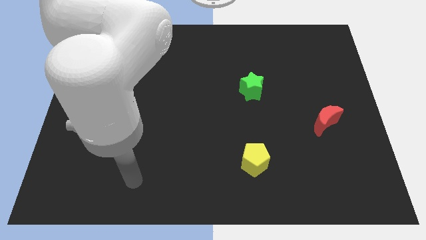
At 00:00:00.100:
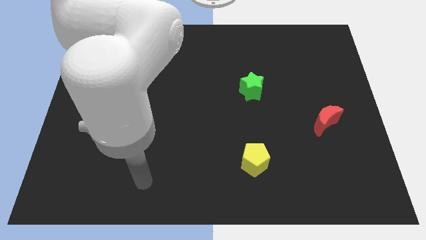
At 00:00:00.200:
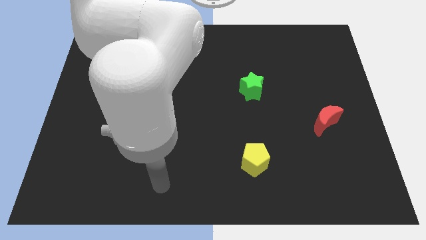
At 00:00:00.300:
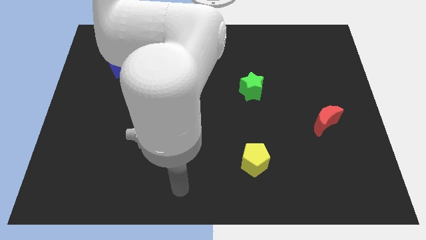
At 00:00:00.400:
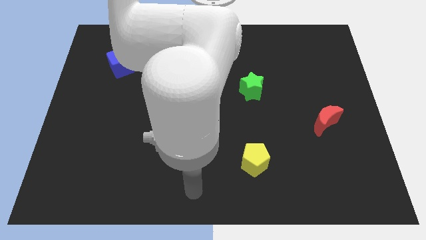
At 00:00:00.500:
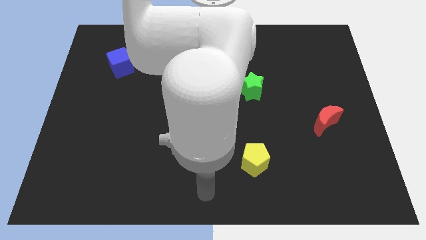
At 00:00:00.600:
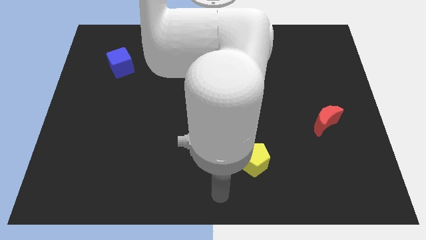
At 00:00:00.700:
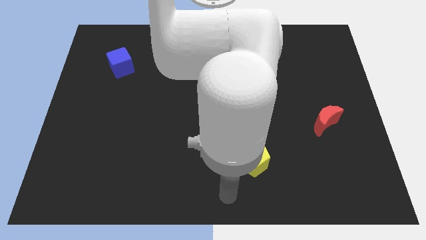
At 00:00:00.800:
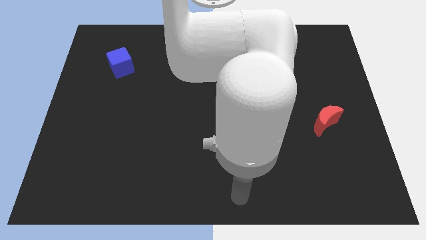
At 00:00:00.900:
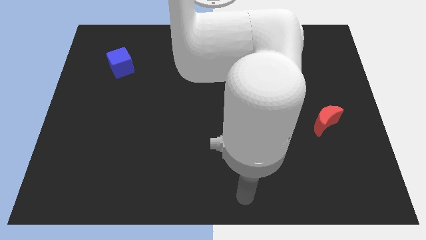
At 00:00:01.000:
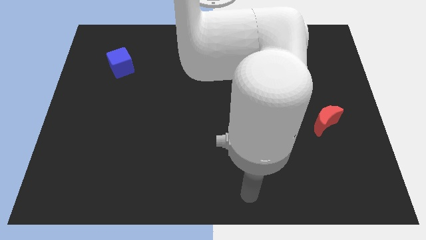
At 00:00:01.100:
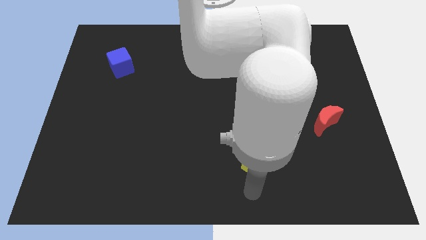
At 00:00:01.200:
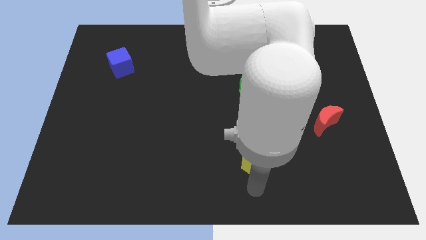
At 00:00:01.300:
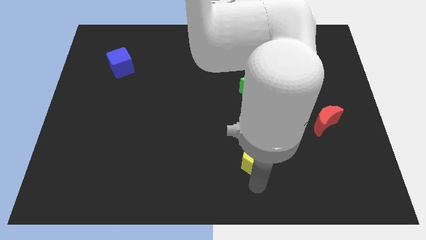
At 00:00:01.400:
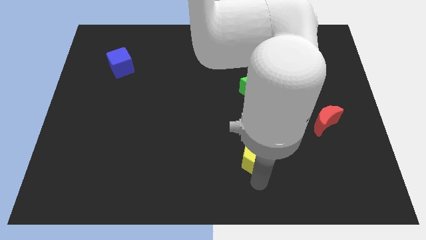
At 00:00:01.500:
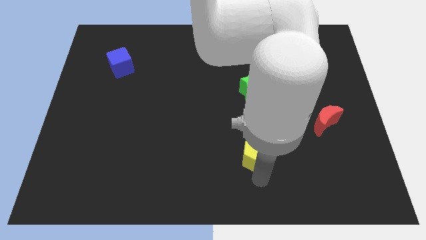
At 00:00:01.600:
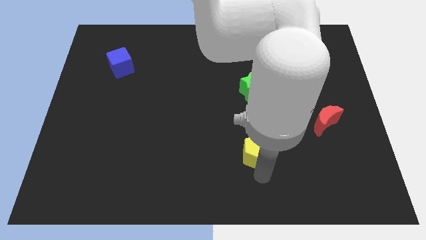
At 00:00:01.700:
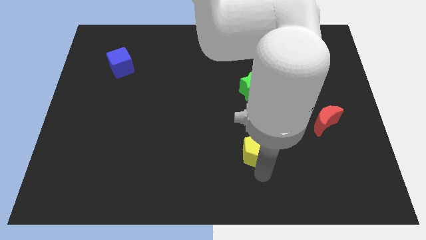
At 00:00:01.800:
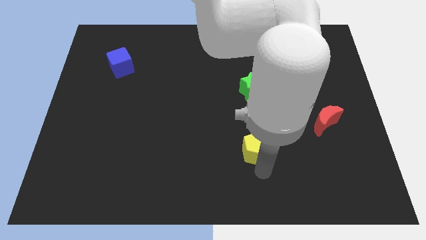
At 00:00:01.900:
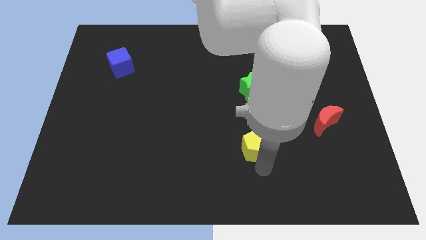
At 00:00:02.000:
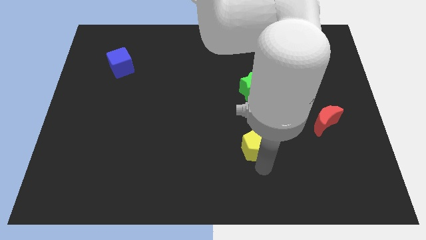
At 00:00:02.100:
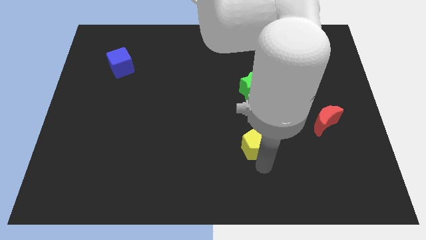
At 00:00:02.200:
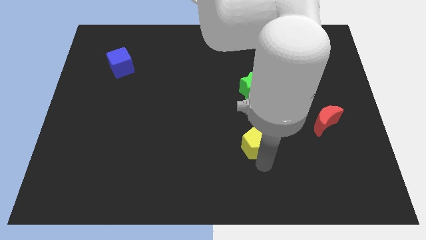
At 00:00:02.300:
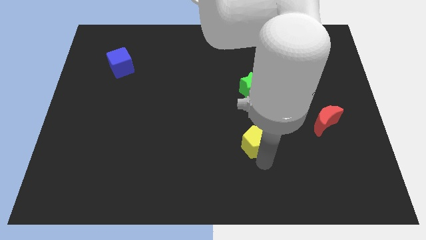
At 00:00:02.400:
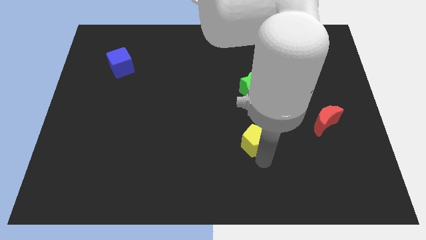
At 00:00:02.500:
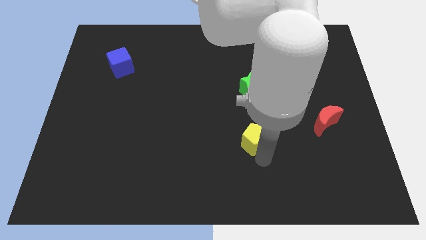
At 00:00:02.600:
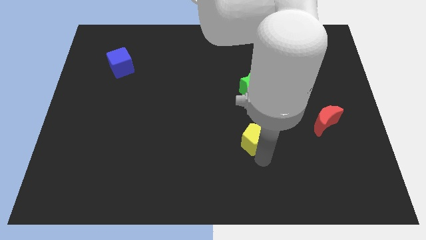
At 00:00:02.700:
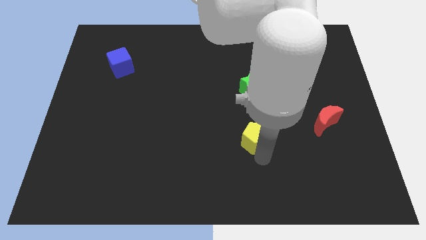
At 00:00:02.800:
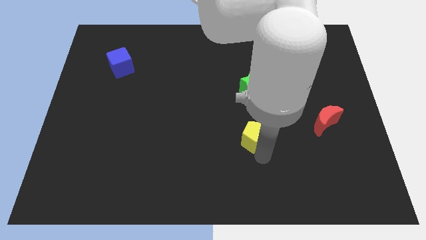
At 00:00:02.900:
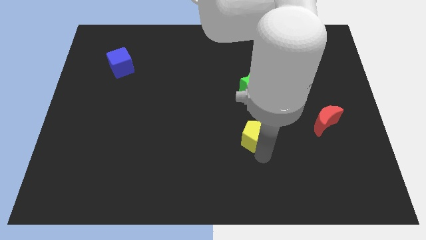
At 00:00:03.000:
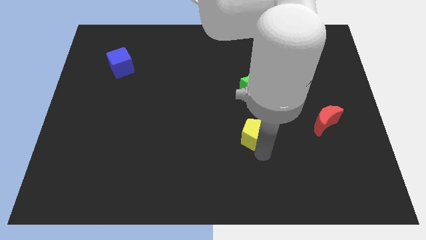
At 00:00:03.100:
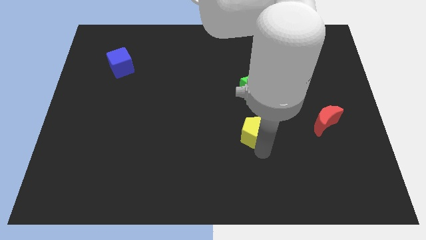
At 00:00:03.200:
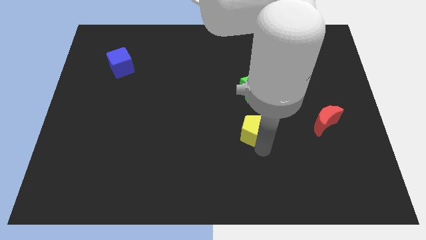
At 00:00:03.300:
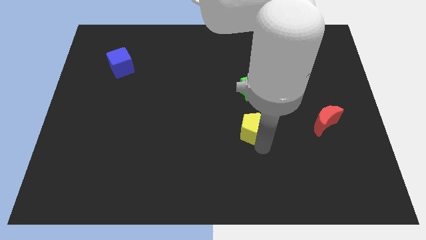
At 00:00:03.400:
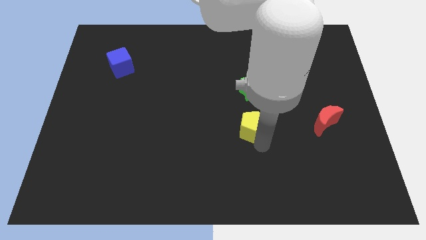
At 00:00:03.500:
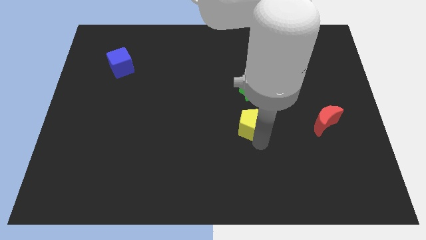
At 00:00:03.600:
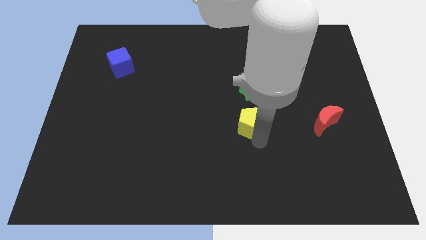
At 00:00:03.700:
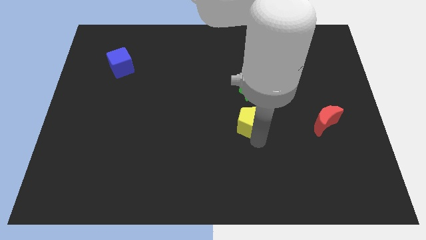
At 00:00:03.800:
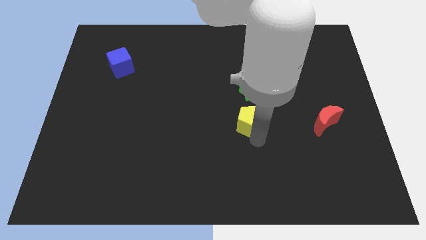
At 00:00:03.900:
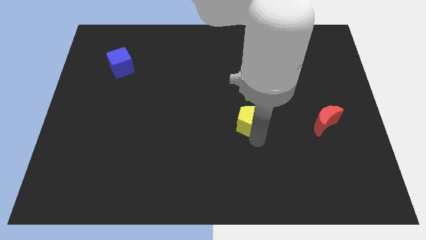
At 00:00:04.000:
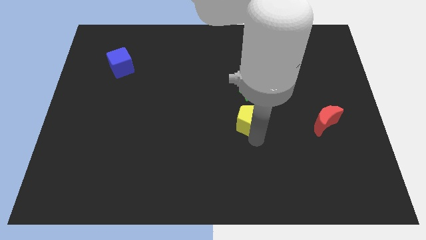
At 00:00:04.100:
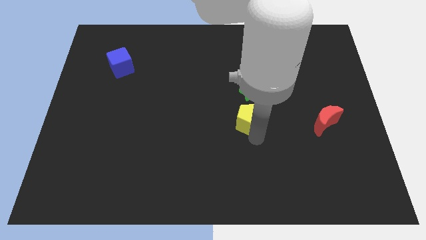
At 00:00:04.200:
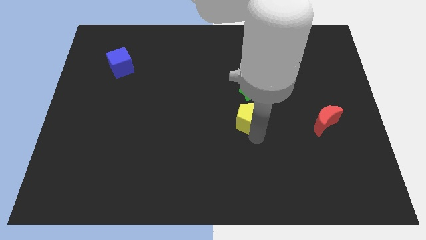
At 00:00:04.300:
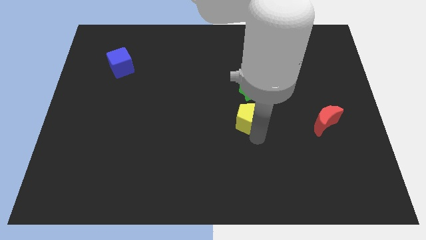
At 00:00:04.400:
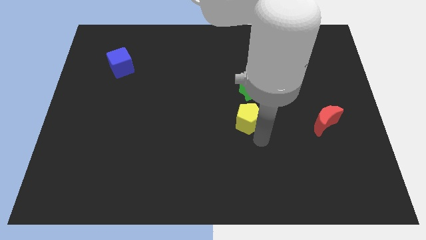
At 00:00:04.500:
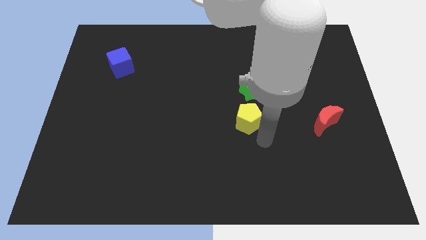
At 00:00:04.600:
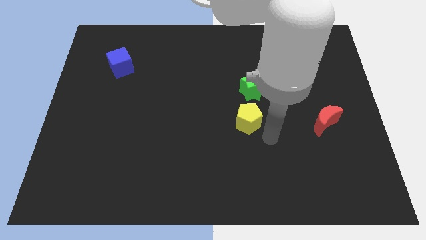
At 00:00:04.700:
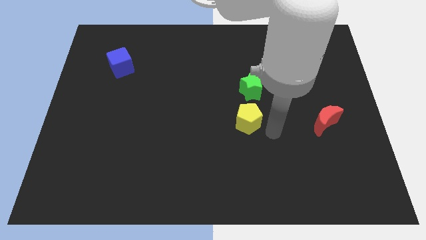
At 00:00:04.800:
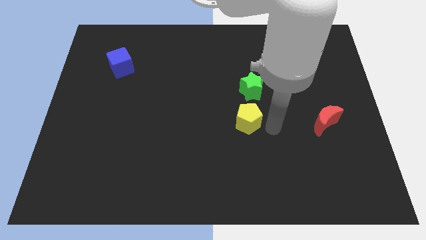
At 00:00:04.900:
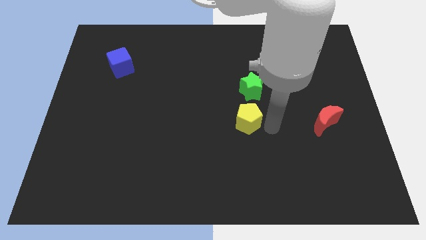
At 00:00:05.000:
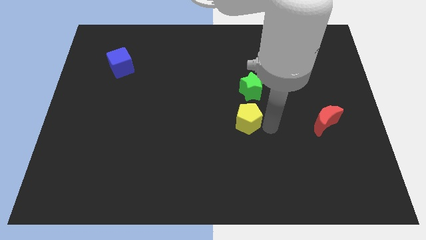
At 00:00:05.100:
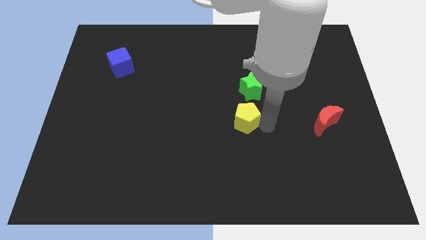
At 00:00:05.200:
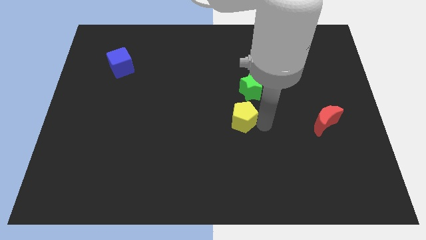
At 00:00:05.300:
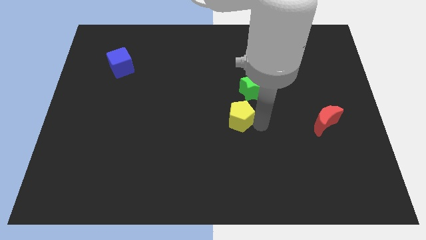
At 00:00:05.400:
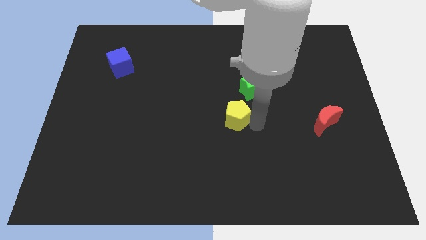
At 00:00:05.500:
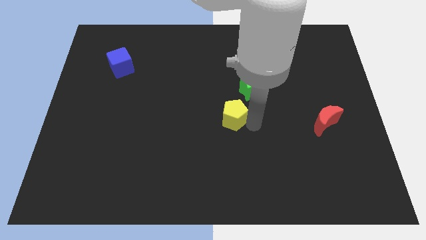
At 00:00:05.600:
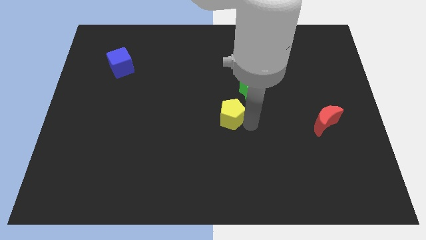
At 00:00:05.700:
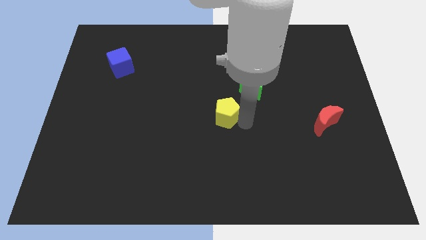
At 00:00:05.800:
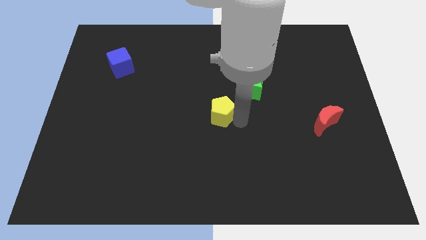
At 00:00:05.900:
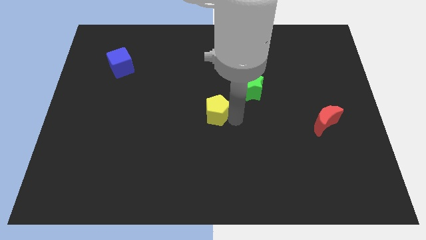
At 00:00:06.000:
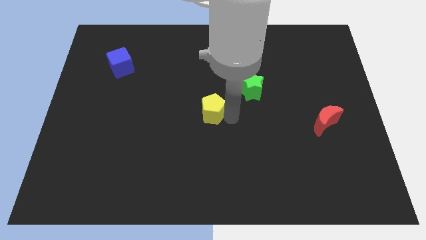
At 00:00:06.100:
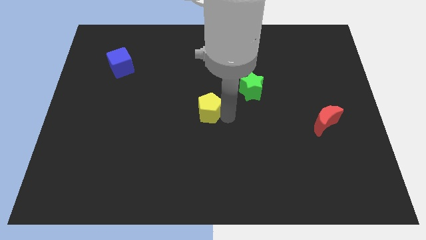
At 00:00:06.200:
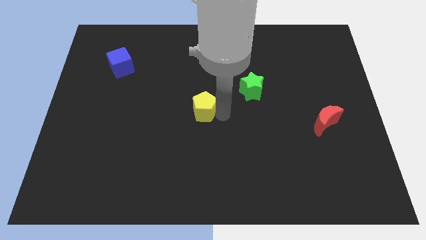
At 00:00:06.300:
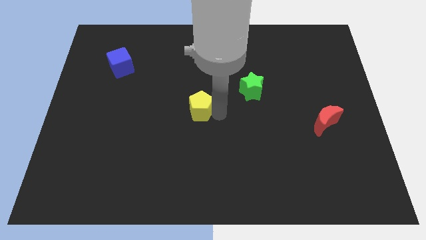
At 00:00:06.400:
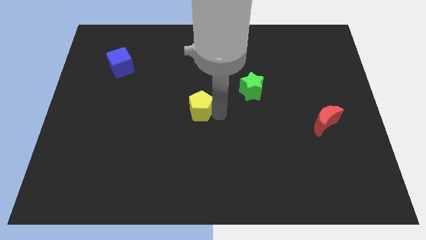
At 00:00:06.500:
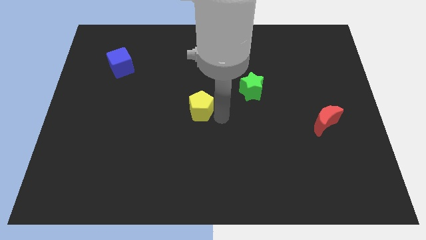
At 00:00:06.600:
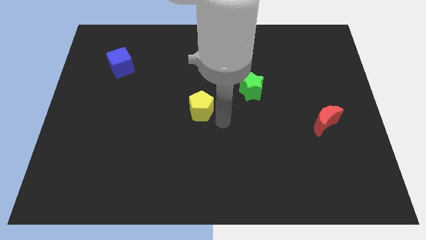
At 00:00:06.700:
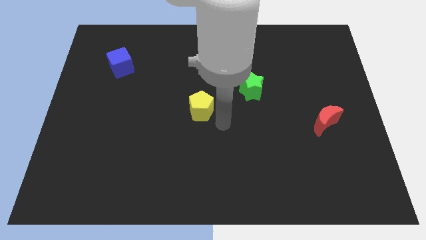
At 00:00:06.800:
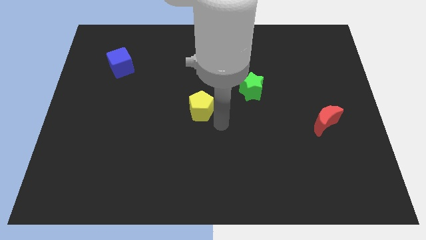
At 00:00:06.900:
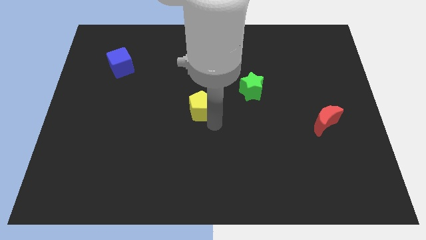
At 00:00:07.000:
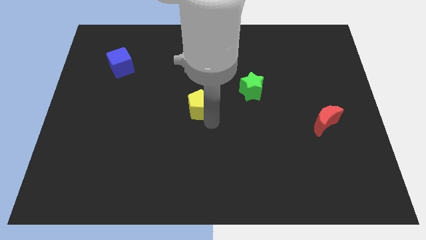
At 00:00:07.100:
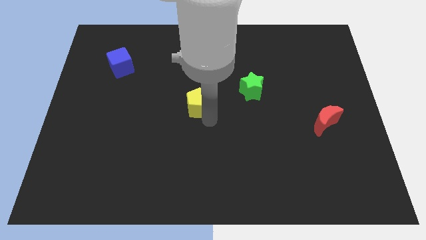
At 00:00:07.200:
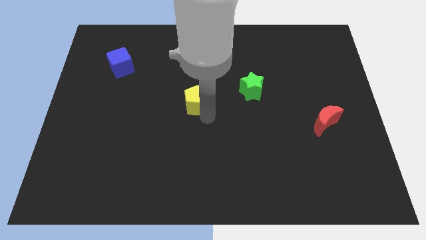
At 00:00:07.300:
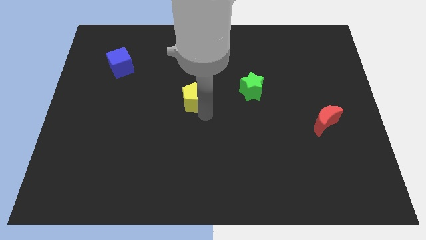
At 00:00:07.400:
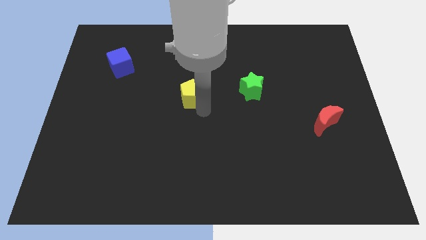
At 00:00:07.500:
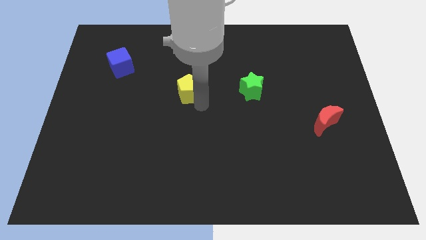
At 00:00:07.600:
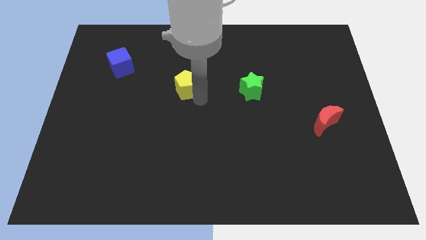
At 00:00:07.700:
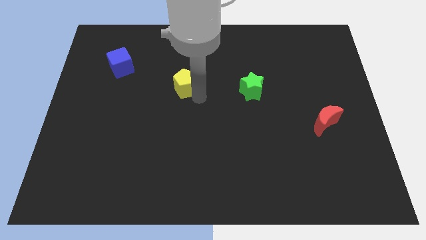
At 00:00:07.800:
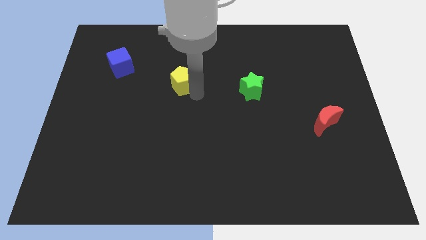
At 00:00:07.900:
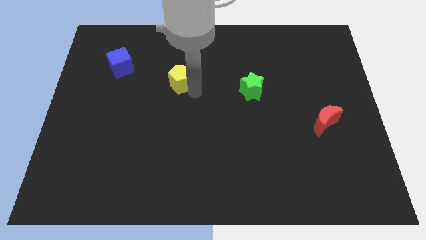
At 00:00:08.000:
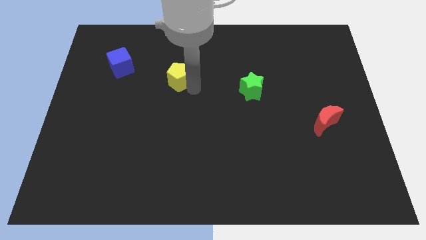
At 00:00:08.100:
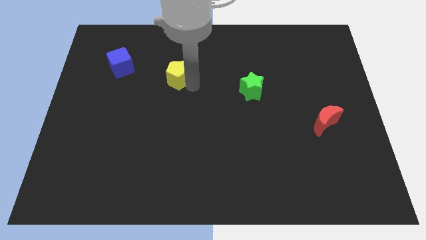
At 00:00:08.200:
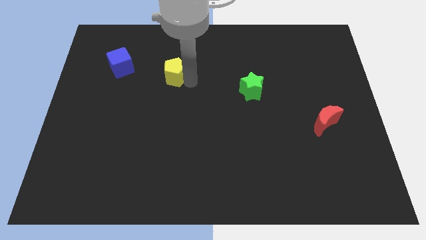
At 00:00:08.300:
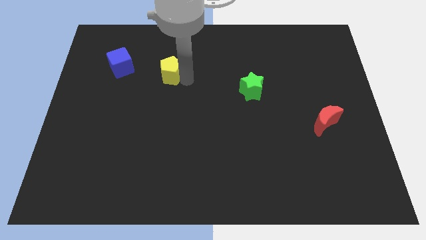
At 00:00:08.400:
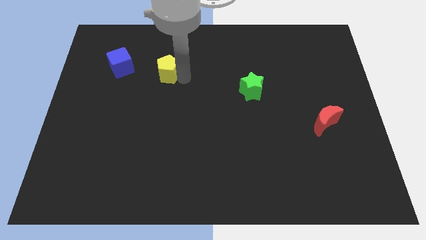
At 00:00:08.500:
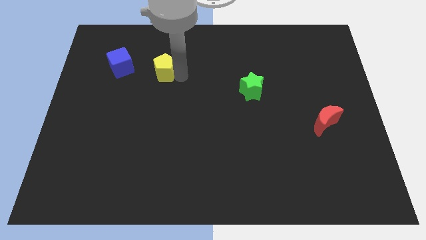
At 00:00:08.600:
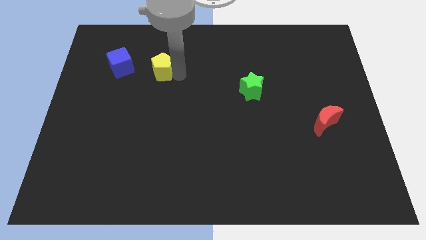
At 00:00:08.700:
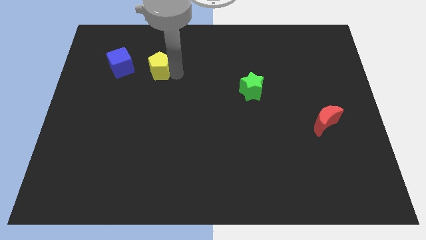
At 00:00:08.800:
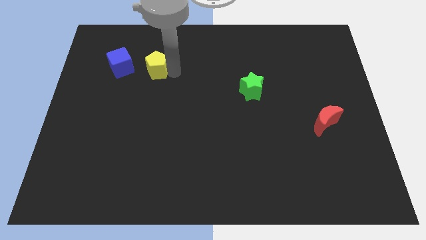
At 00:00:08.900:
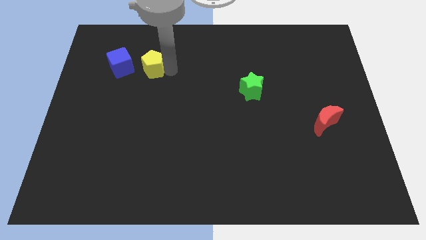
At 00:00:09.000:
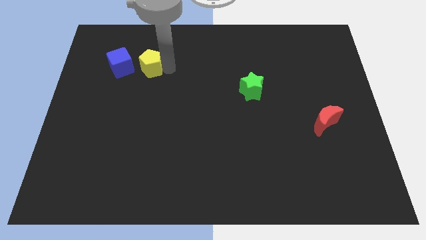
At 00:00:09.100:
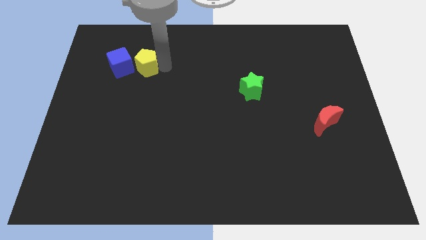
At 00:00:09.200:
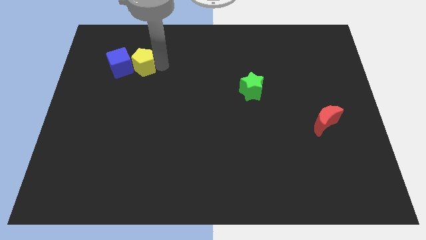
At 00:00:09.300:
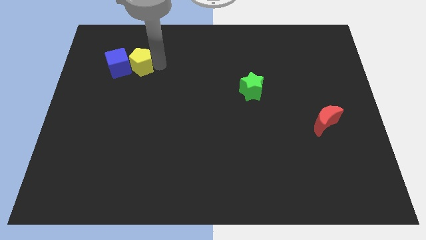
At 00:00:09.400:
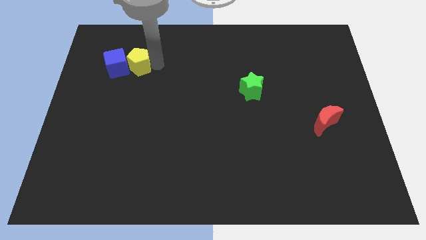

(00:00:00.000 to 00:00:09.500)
put the pentagon towards the blue block
